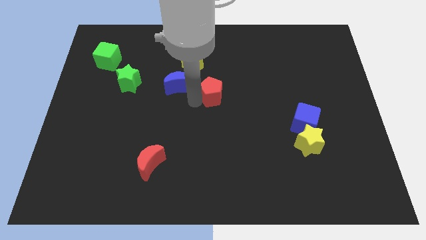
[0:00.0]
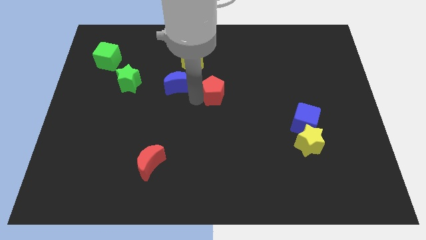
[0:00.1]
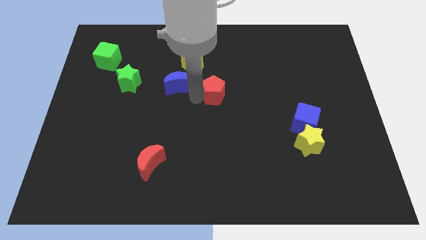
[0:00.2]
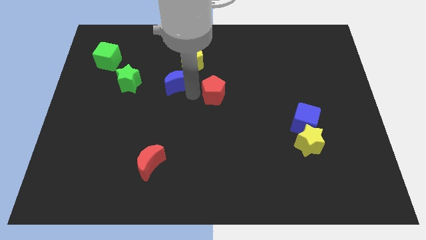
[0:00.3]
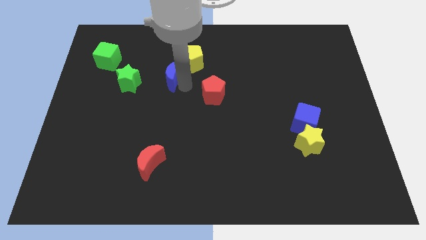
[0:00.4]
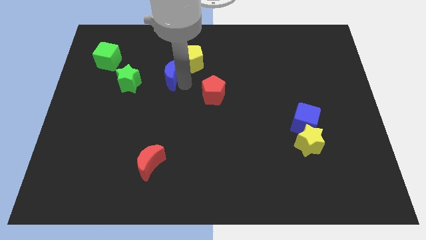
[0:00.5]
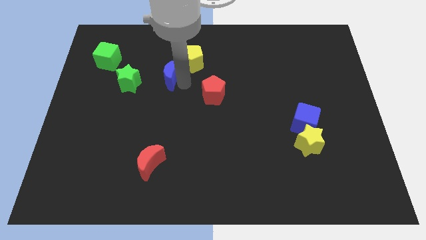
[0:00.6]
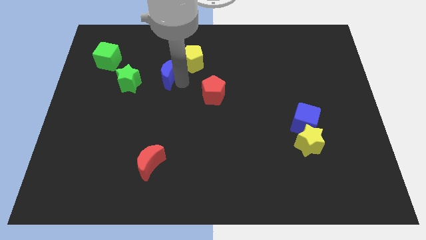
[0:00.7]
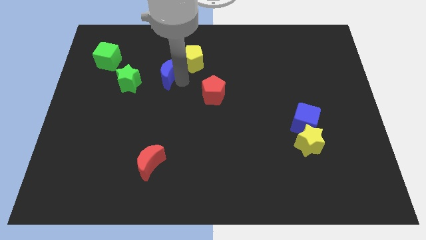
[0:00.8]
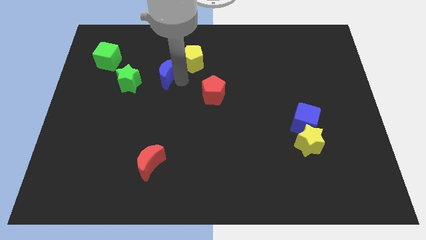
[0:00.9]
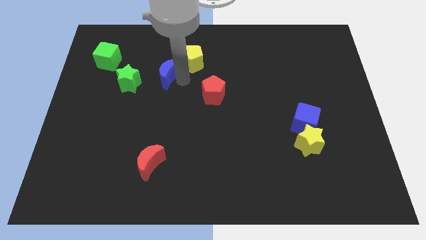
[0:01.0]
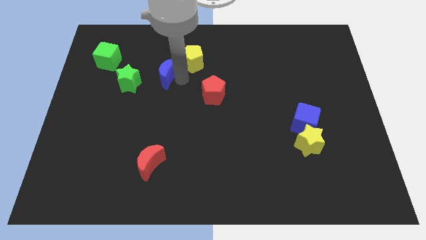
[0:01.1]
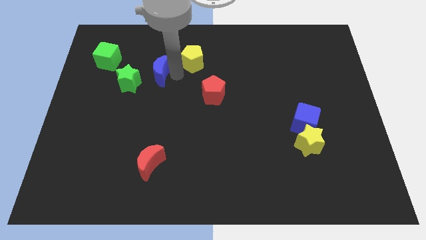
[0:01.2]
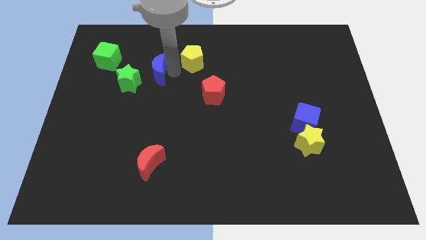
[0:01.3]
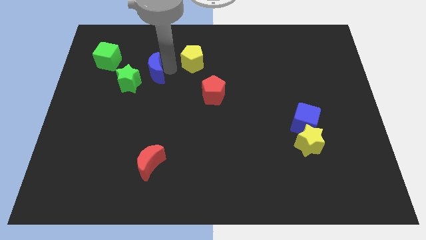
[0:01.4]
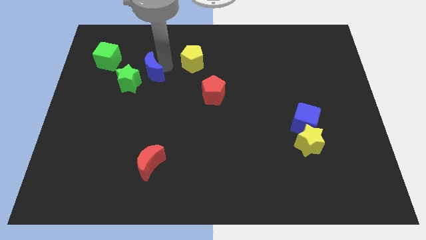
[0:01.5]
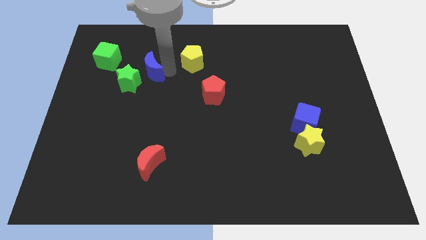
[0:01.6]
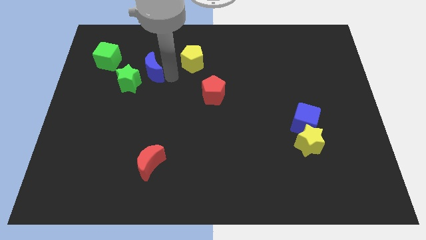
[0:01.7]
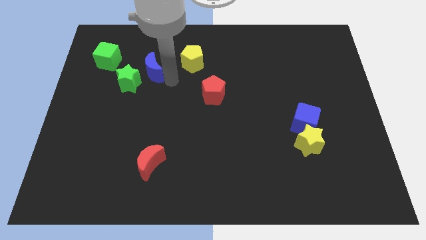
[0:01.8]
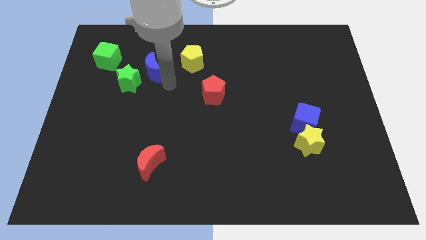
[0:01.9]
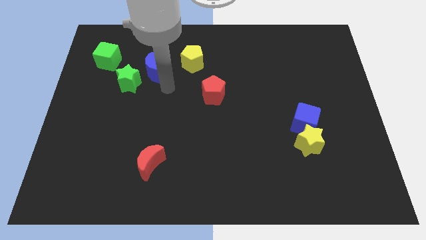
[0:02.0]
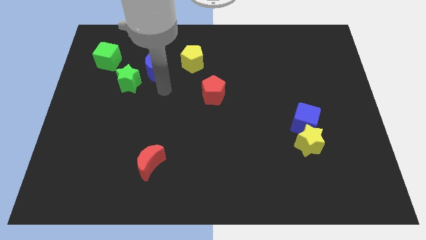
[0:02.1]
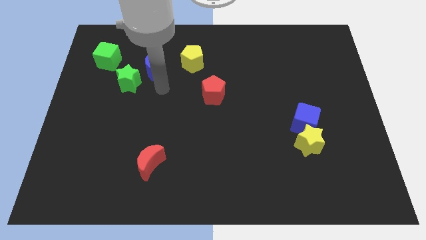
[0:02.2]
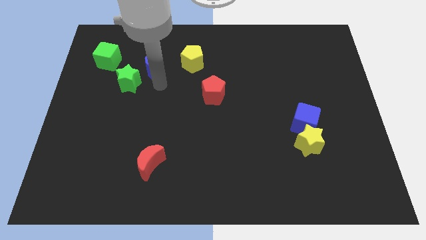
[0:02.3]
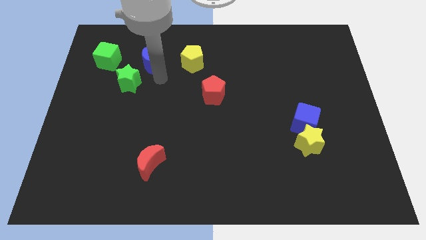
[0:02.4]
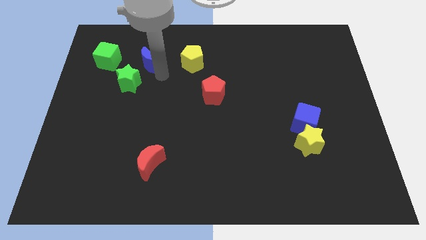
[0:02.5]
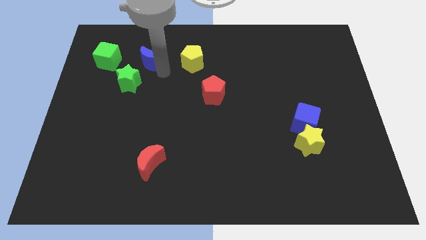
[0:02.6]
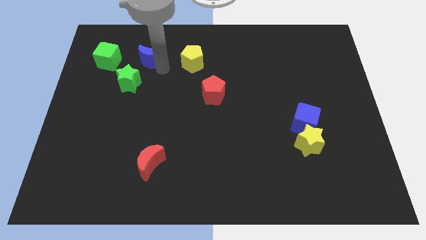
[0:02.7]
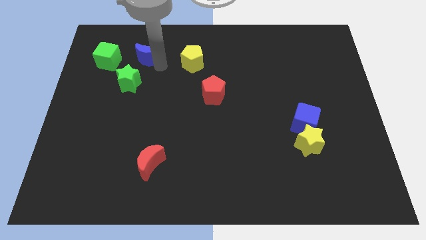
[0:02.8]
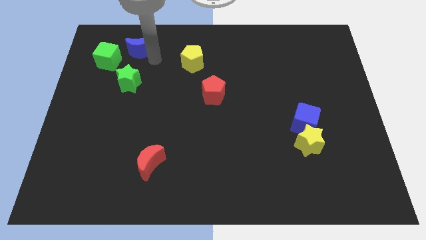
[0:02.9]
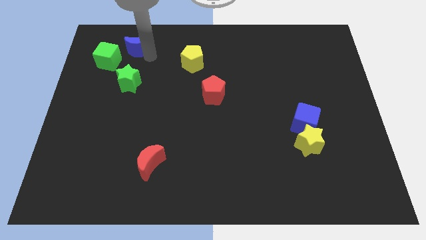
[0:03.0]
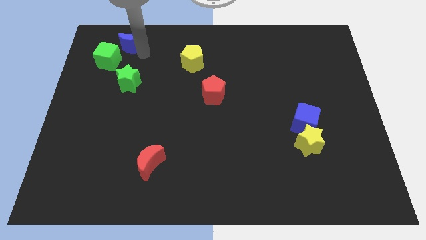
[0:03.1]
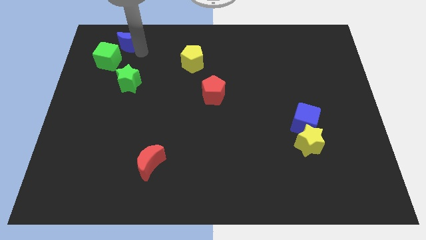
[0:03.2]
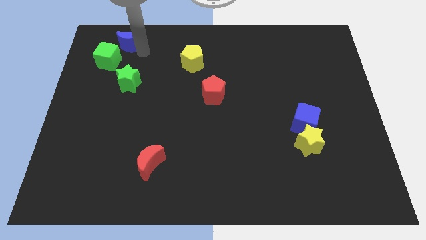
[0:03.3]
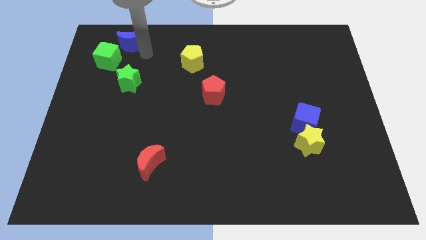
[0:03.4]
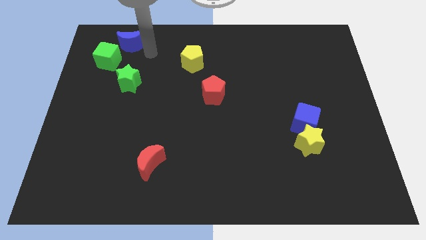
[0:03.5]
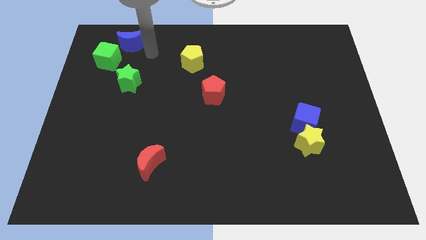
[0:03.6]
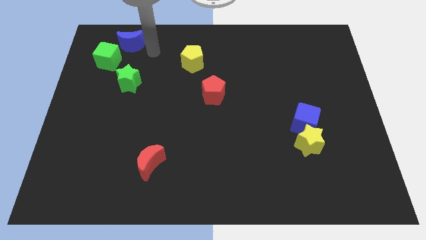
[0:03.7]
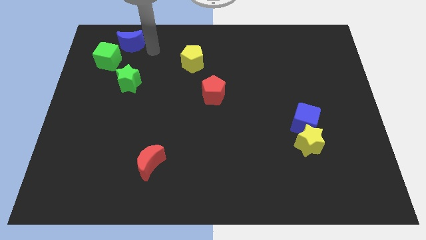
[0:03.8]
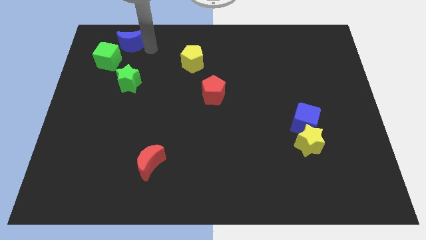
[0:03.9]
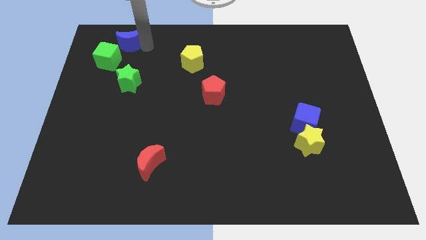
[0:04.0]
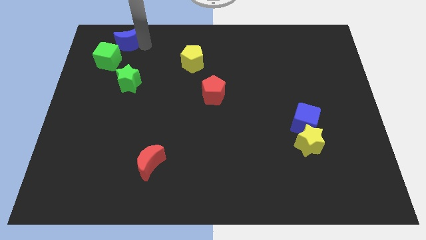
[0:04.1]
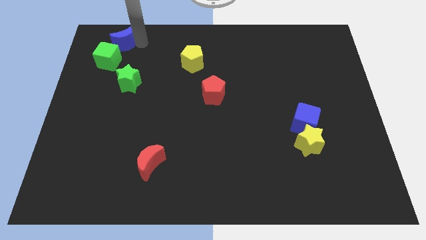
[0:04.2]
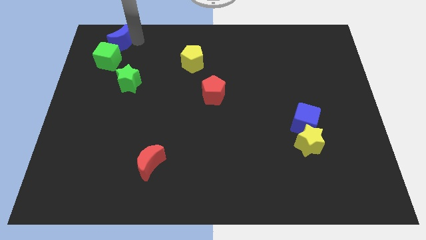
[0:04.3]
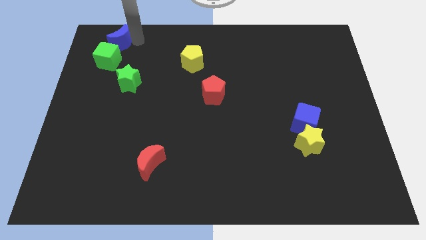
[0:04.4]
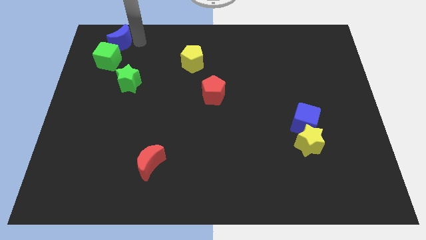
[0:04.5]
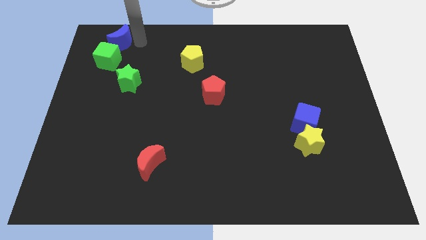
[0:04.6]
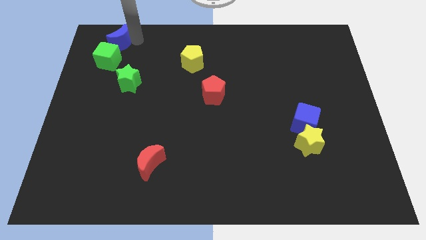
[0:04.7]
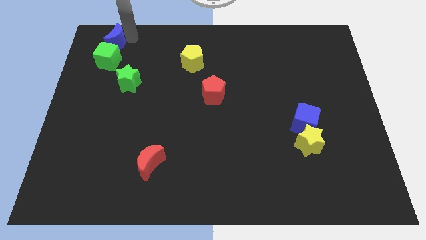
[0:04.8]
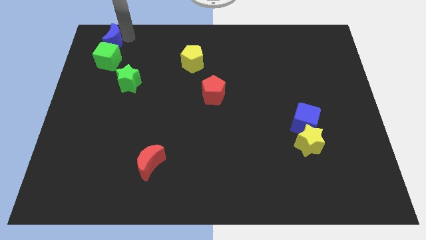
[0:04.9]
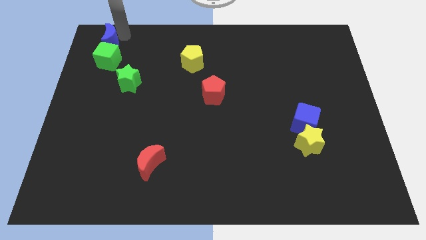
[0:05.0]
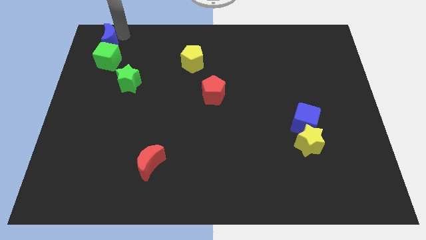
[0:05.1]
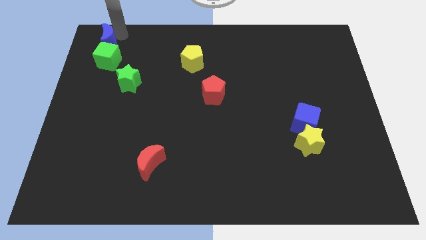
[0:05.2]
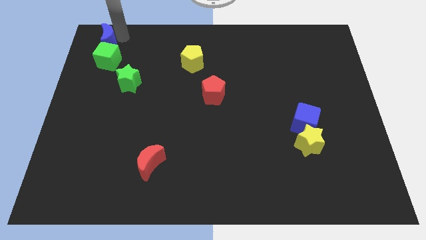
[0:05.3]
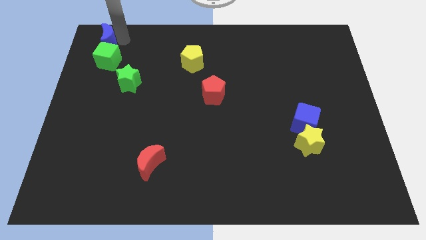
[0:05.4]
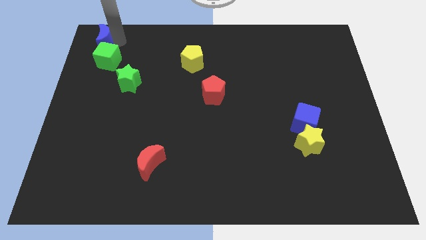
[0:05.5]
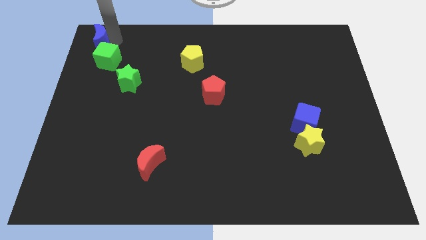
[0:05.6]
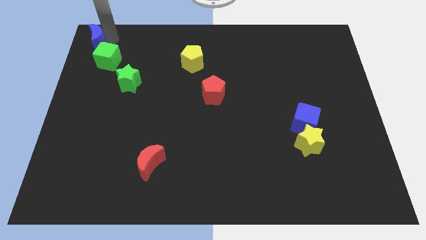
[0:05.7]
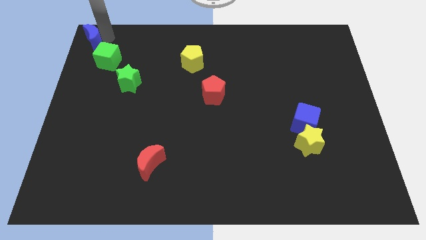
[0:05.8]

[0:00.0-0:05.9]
place the blue moon at the top left corner of the board

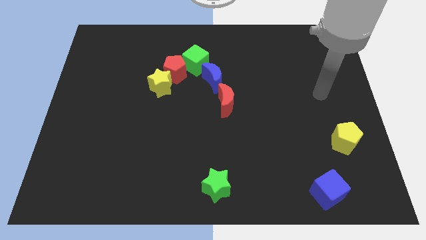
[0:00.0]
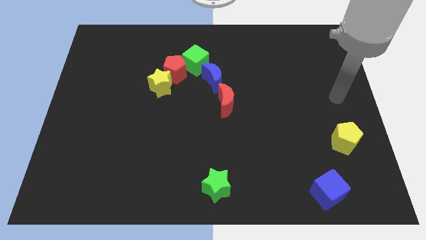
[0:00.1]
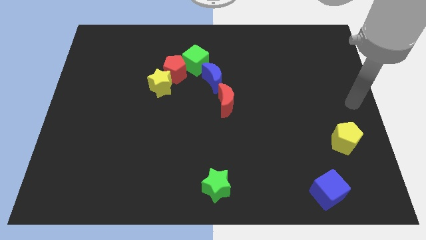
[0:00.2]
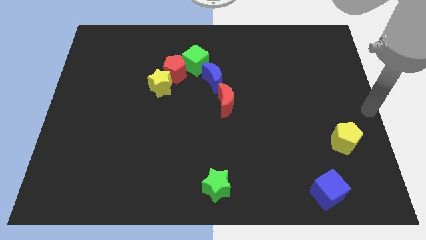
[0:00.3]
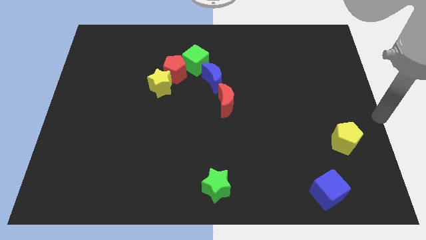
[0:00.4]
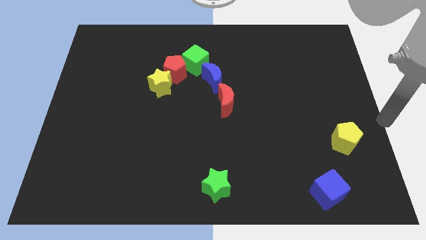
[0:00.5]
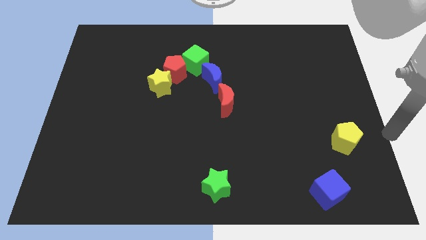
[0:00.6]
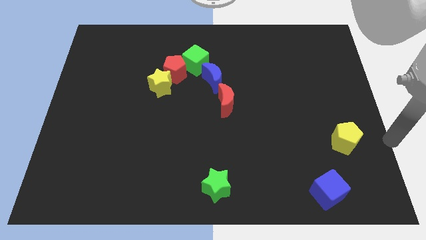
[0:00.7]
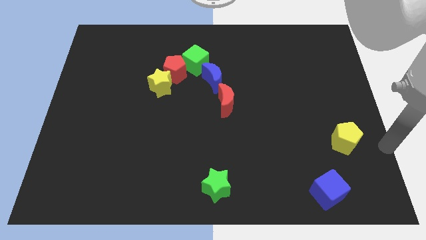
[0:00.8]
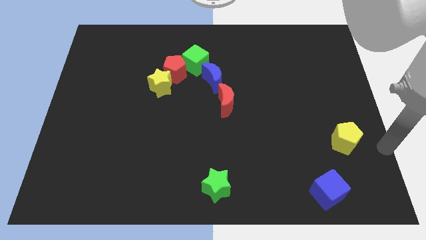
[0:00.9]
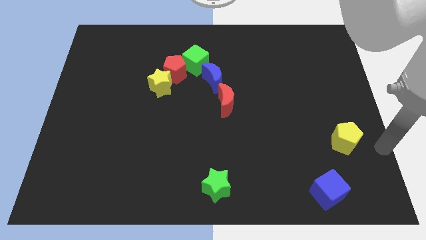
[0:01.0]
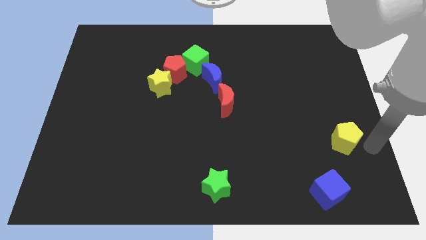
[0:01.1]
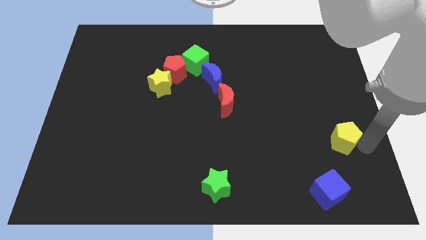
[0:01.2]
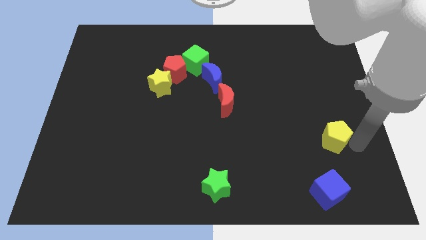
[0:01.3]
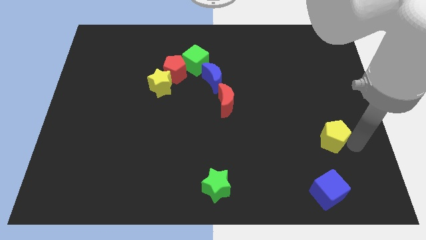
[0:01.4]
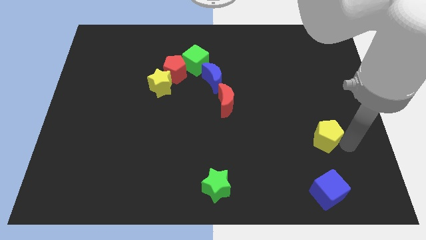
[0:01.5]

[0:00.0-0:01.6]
place the yellow pentagon above the blue cube

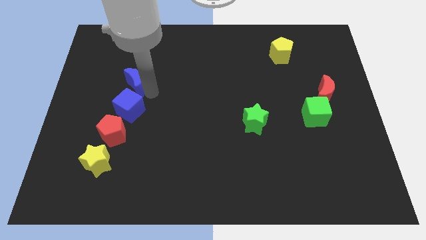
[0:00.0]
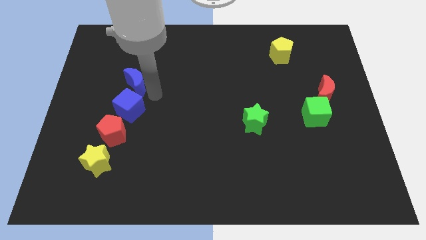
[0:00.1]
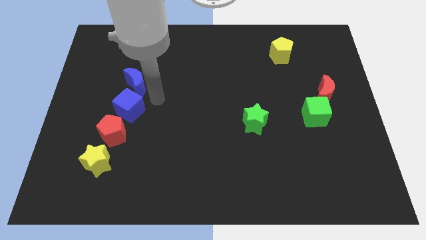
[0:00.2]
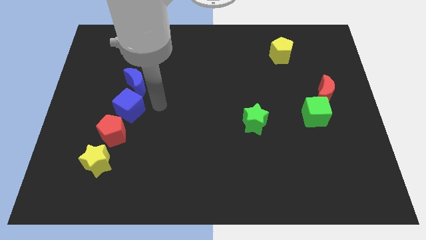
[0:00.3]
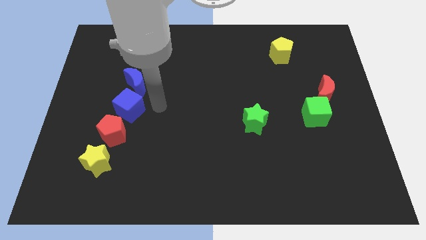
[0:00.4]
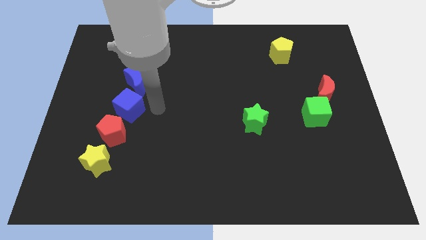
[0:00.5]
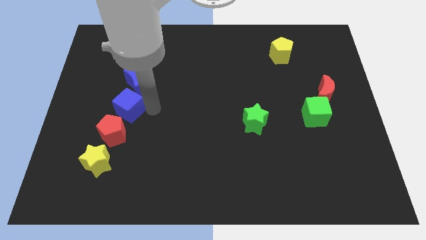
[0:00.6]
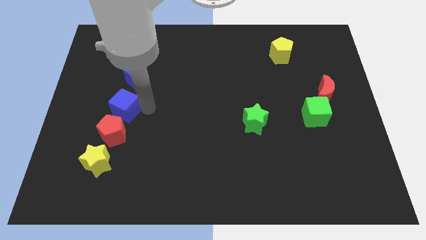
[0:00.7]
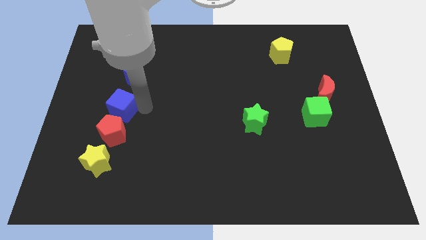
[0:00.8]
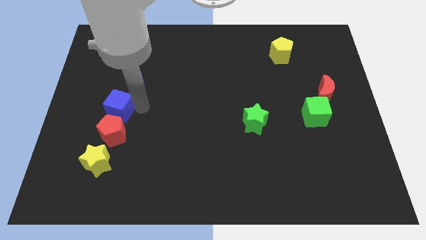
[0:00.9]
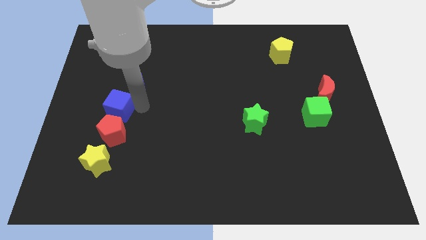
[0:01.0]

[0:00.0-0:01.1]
move the blue cube slightly close to the red pentagon
